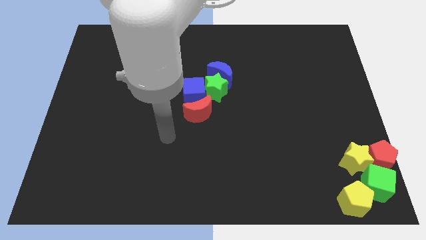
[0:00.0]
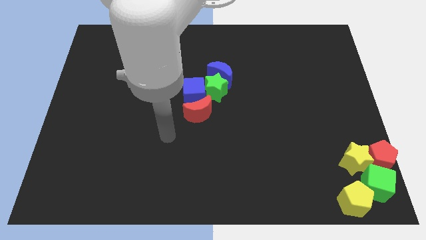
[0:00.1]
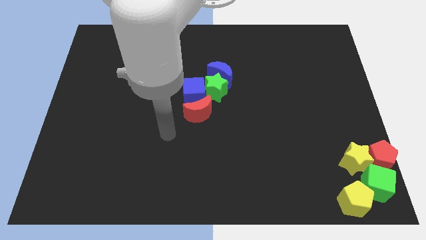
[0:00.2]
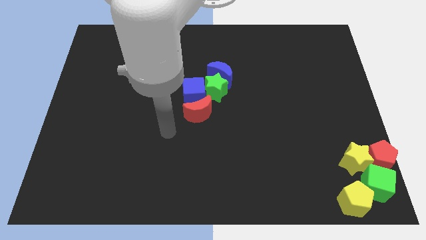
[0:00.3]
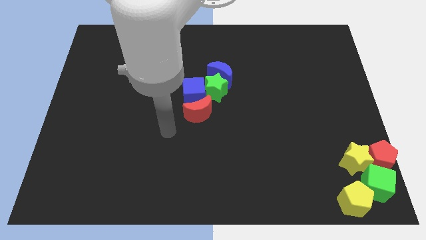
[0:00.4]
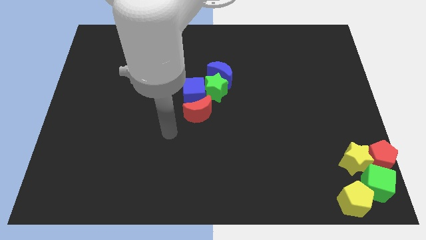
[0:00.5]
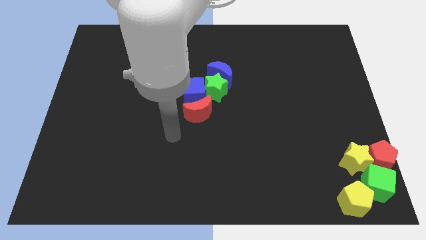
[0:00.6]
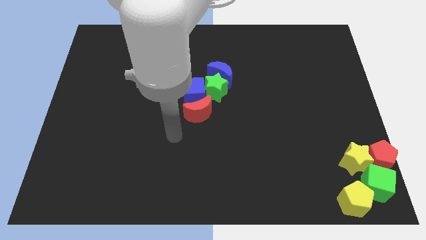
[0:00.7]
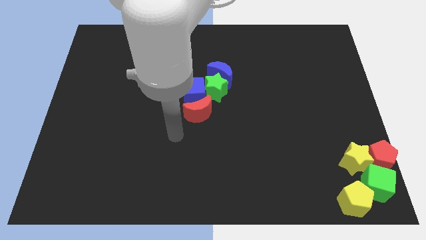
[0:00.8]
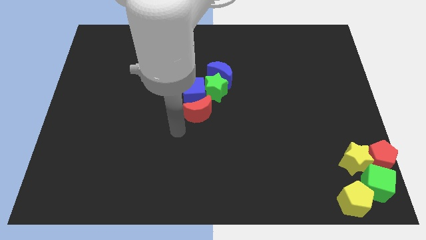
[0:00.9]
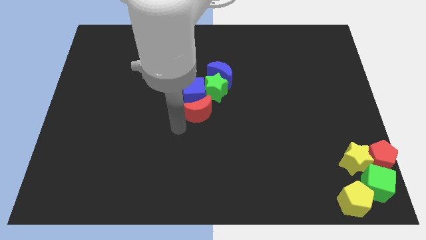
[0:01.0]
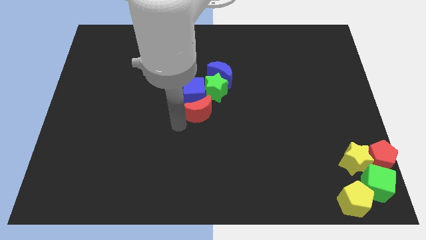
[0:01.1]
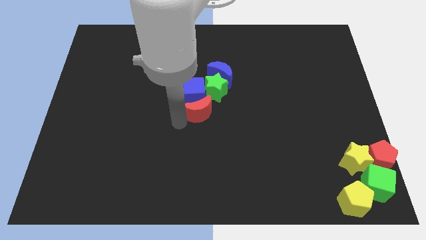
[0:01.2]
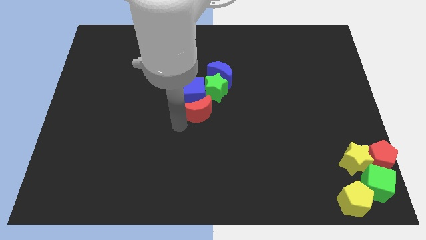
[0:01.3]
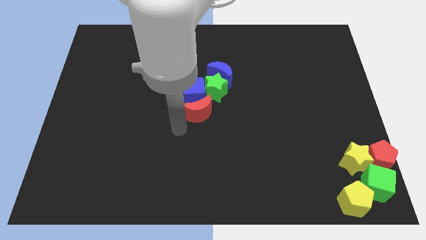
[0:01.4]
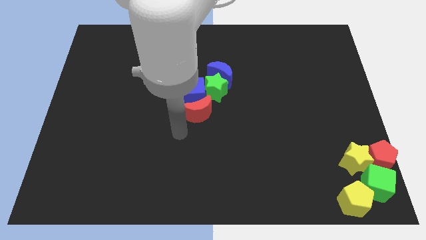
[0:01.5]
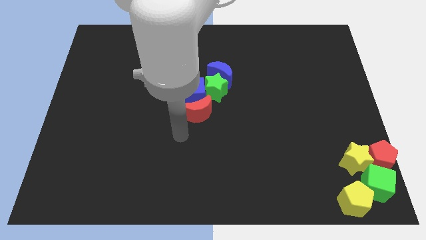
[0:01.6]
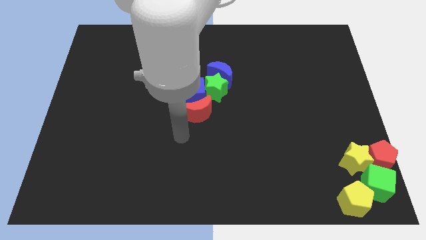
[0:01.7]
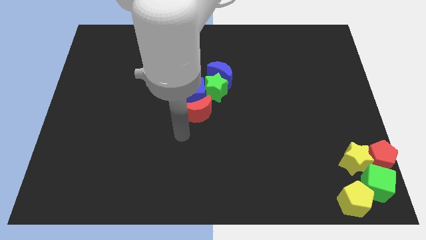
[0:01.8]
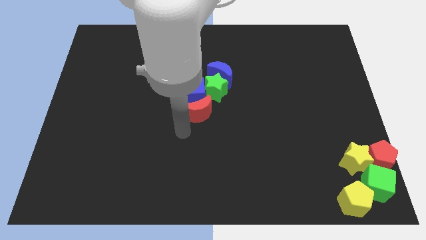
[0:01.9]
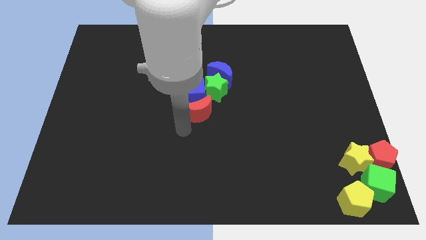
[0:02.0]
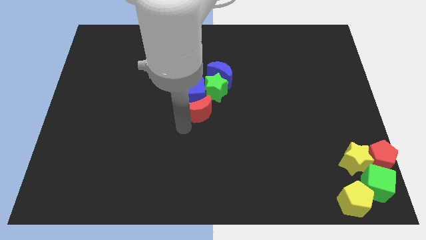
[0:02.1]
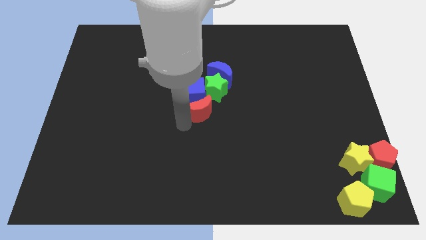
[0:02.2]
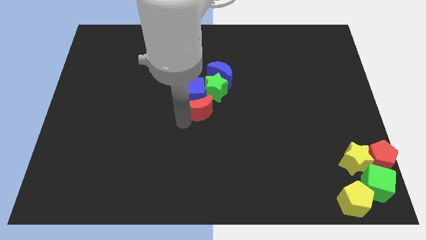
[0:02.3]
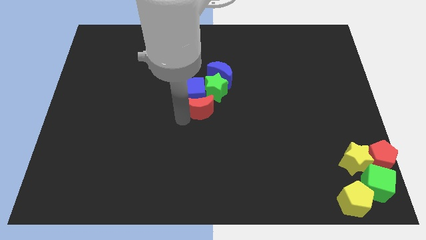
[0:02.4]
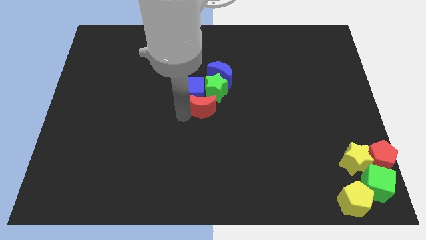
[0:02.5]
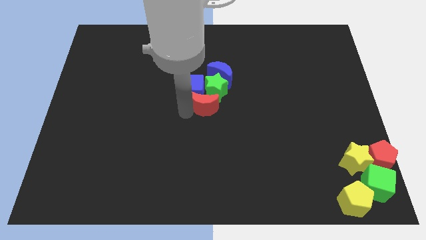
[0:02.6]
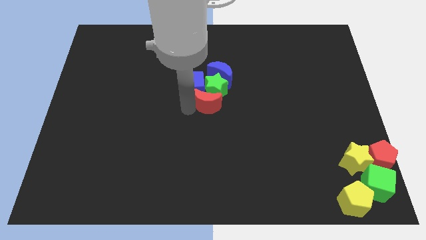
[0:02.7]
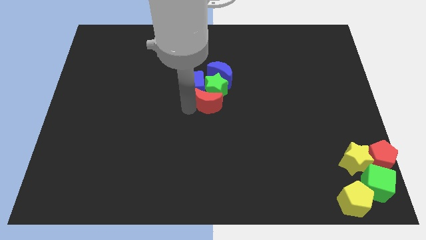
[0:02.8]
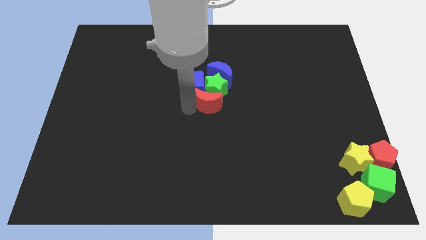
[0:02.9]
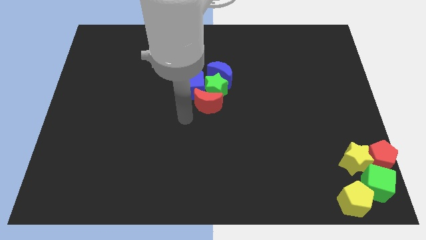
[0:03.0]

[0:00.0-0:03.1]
push the red crescent into the bottom side of the green star

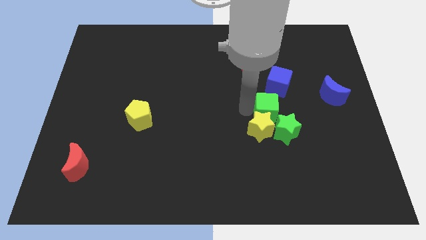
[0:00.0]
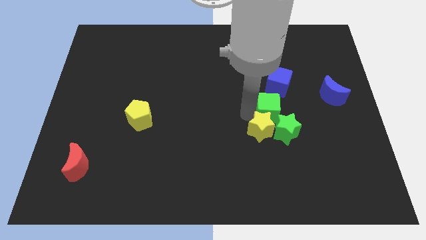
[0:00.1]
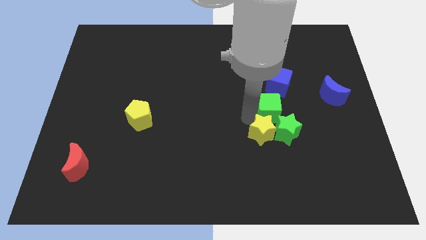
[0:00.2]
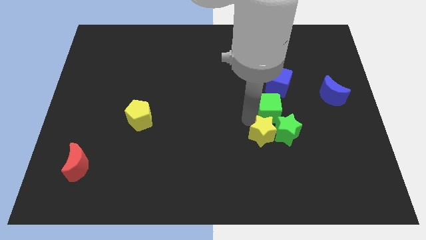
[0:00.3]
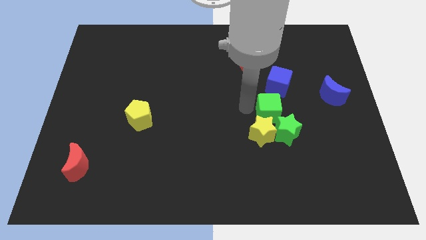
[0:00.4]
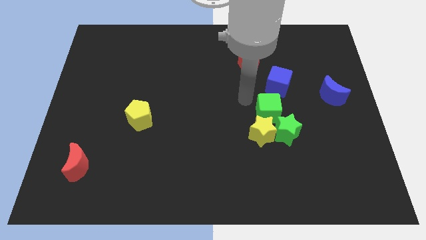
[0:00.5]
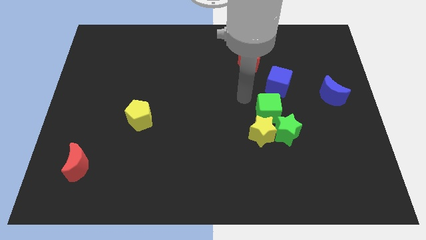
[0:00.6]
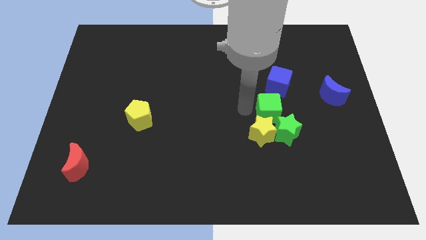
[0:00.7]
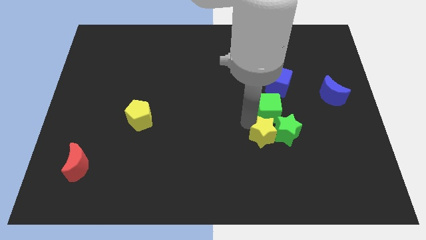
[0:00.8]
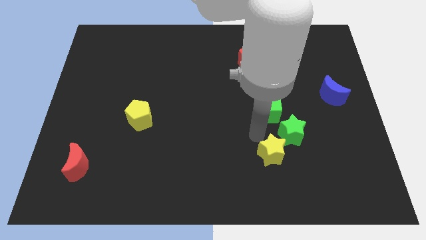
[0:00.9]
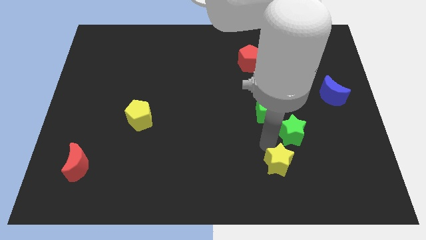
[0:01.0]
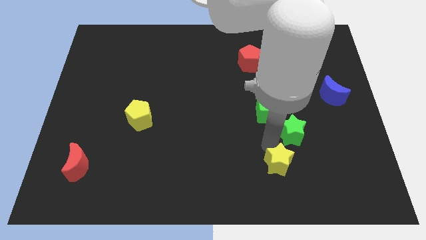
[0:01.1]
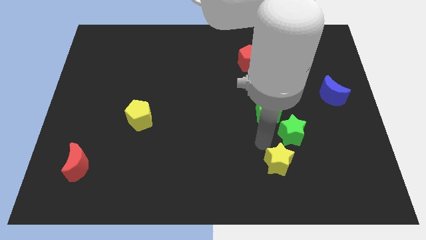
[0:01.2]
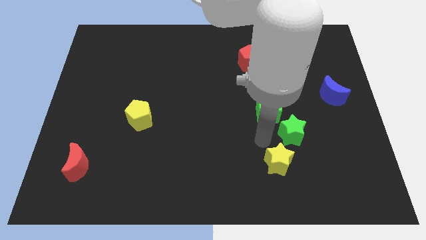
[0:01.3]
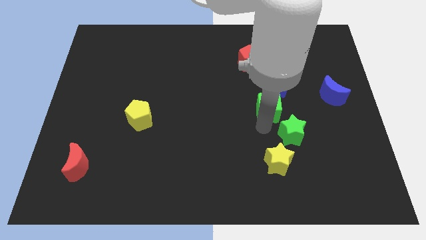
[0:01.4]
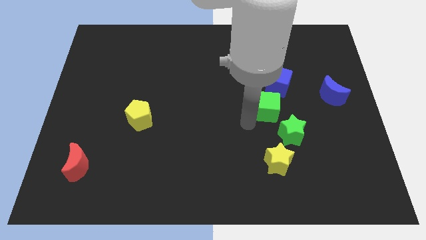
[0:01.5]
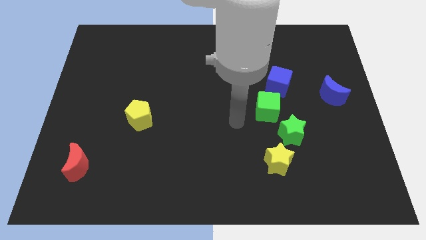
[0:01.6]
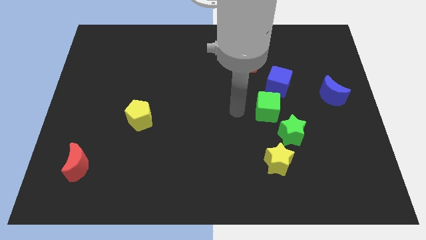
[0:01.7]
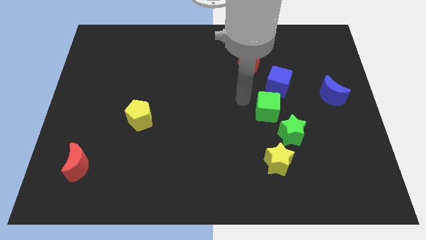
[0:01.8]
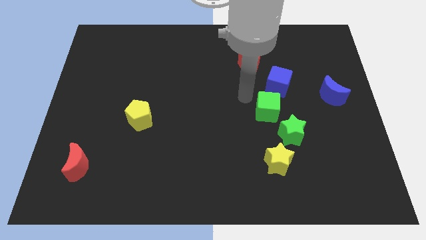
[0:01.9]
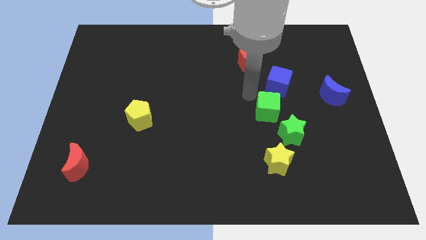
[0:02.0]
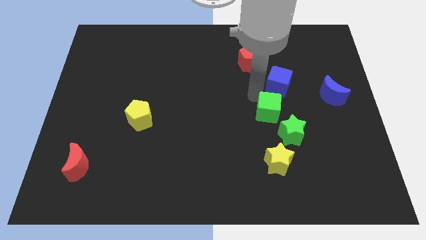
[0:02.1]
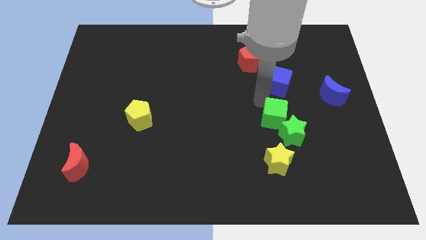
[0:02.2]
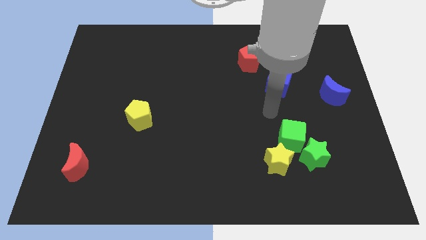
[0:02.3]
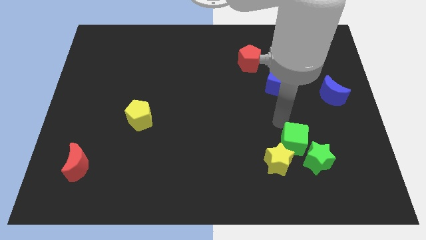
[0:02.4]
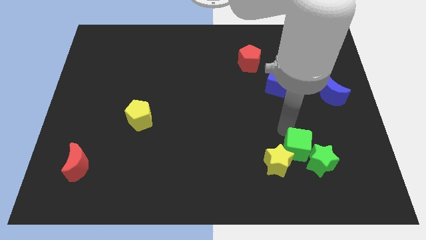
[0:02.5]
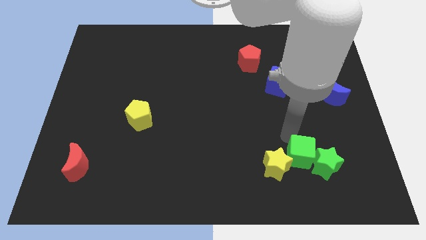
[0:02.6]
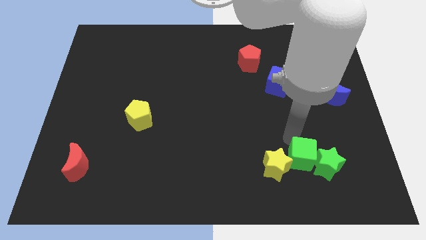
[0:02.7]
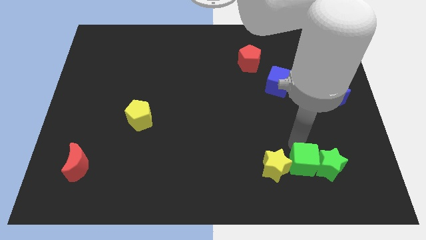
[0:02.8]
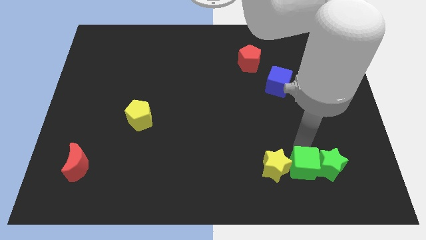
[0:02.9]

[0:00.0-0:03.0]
place green cube between yellow star and green star

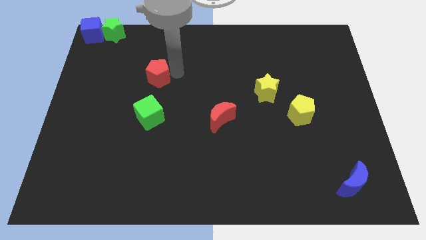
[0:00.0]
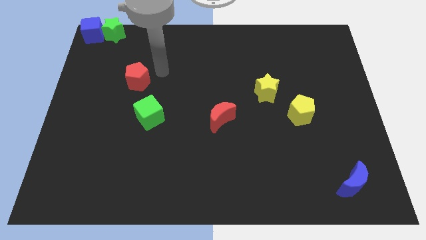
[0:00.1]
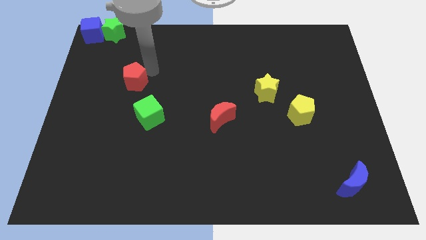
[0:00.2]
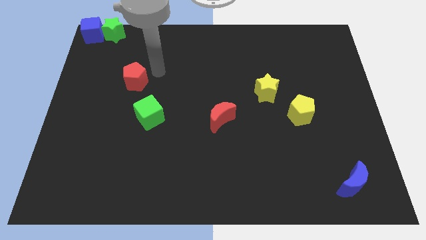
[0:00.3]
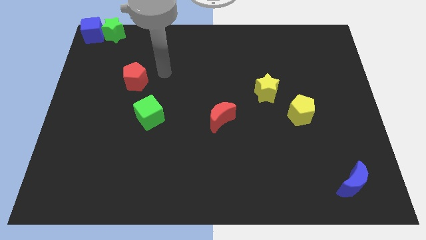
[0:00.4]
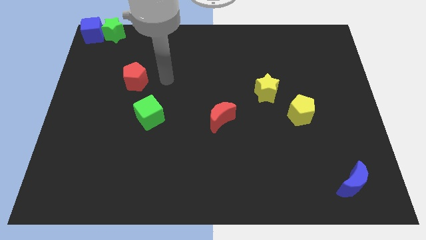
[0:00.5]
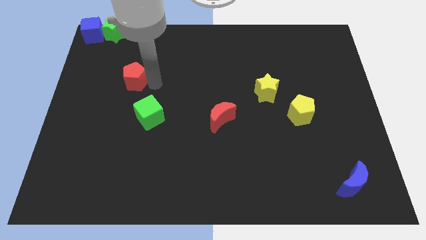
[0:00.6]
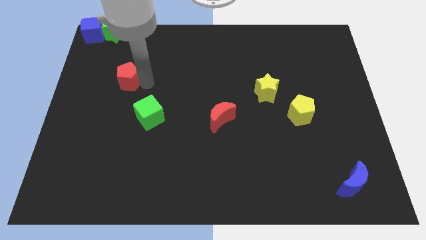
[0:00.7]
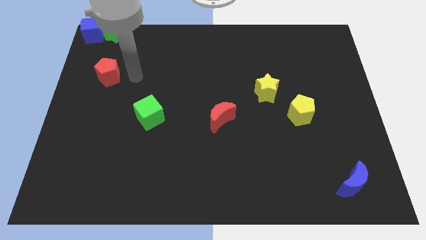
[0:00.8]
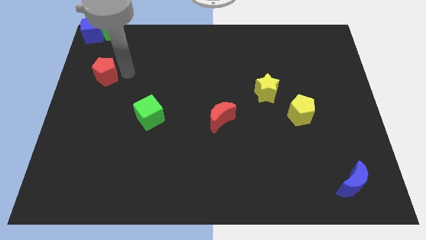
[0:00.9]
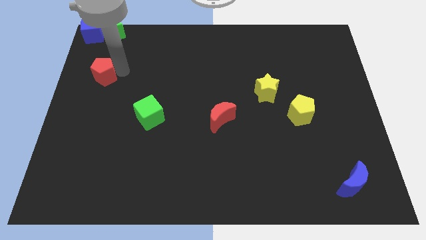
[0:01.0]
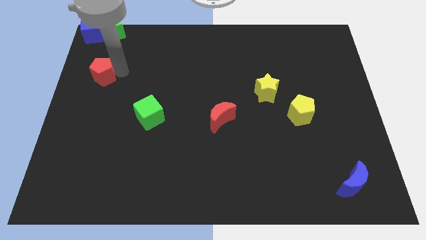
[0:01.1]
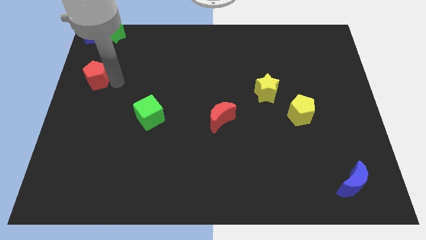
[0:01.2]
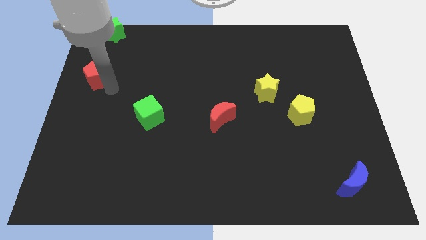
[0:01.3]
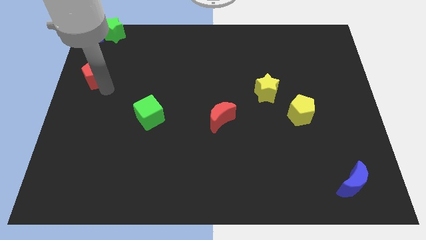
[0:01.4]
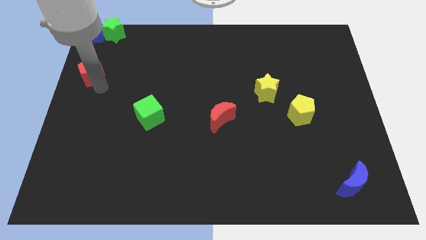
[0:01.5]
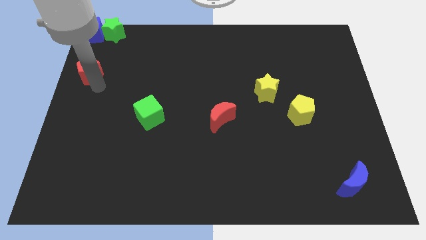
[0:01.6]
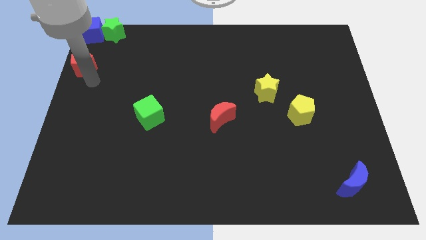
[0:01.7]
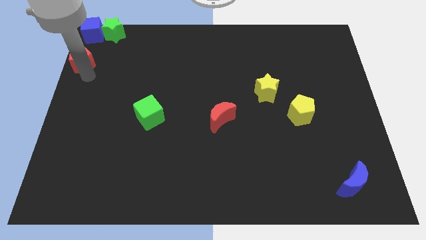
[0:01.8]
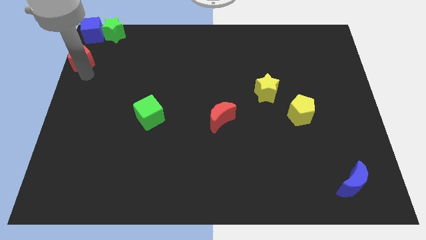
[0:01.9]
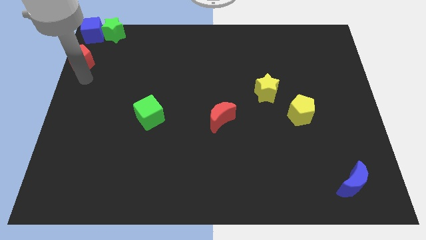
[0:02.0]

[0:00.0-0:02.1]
place the red pentagon to the bottom side of the blue cube

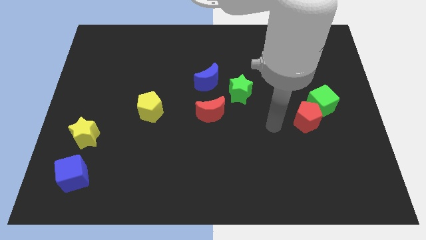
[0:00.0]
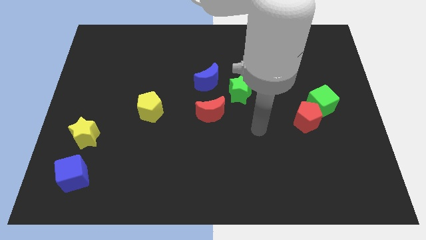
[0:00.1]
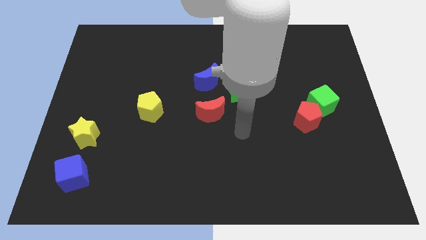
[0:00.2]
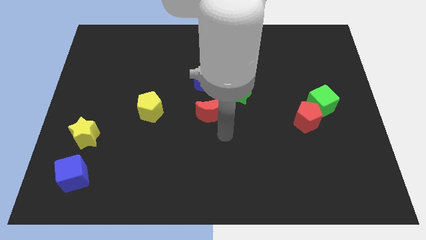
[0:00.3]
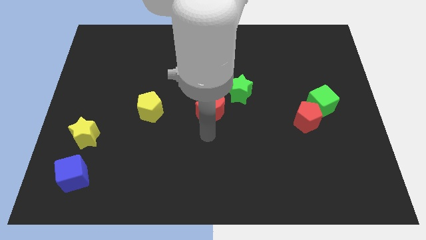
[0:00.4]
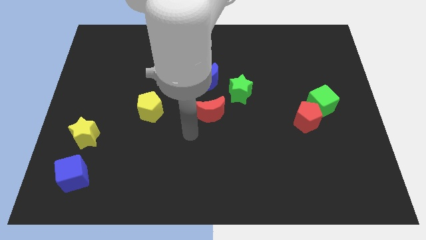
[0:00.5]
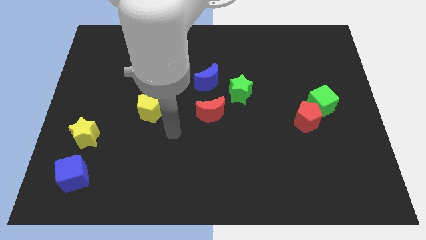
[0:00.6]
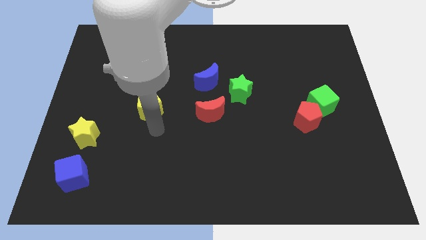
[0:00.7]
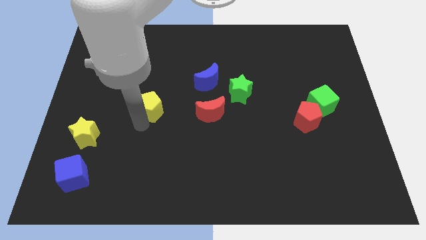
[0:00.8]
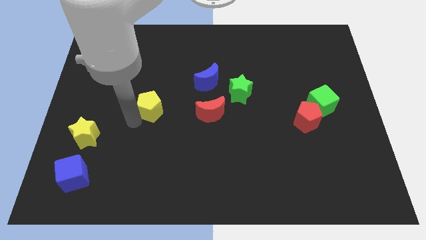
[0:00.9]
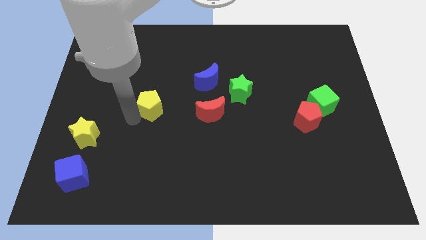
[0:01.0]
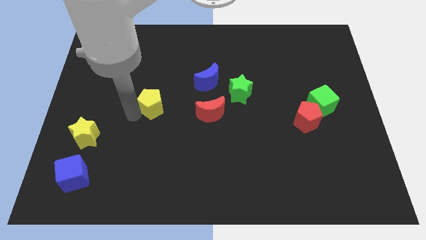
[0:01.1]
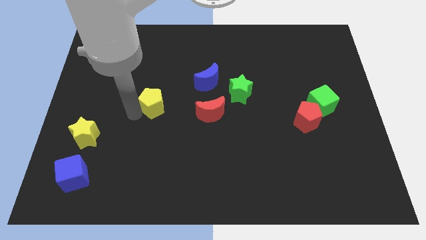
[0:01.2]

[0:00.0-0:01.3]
touch the yellow pentagon
